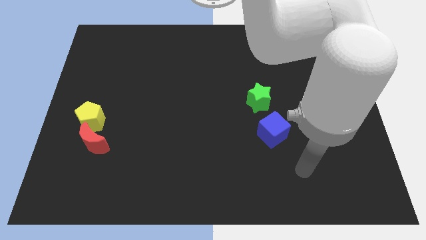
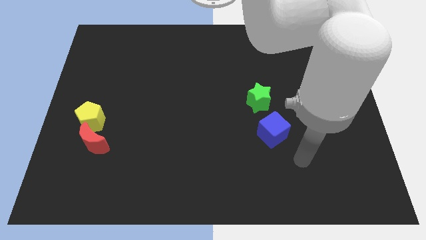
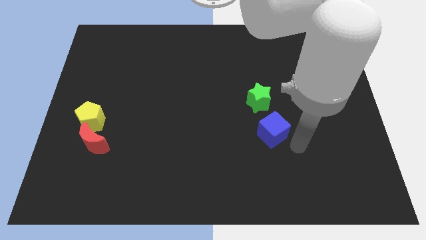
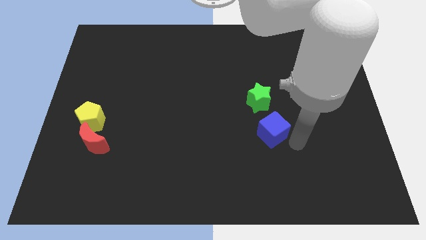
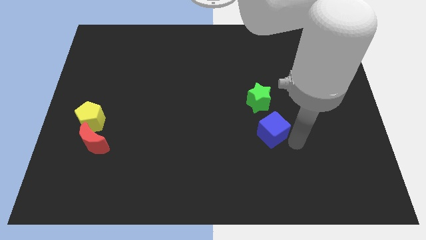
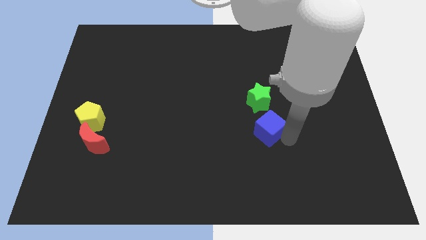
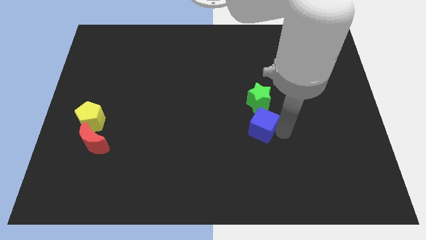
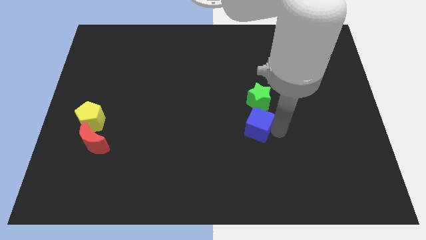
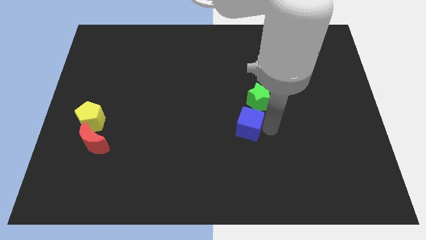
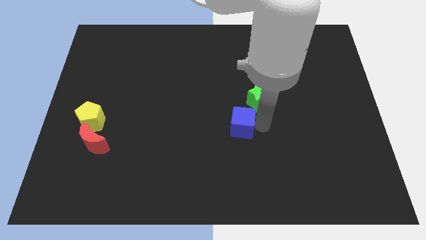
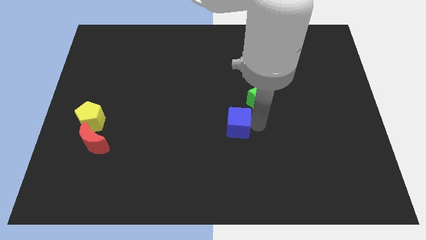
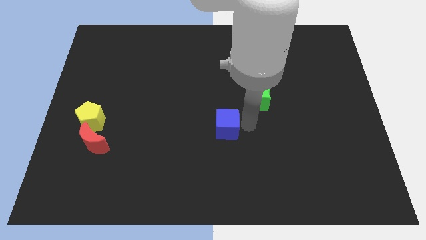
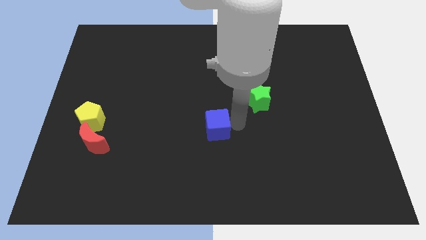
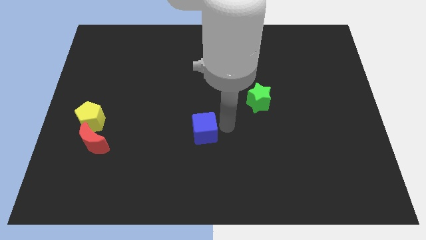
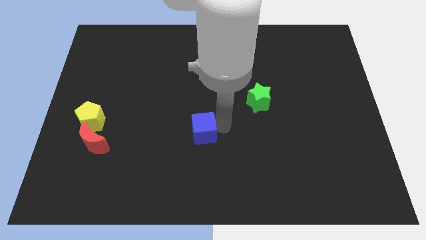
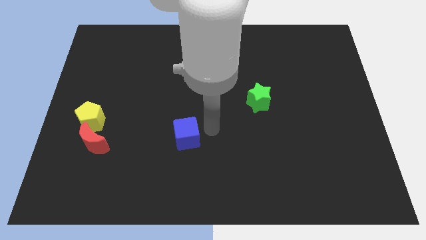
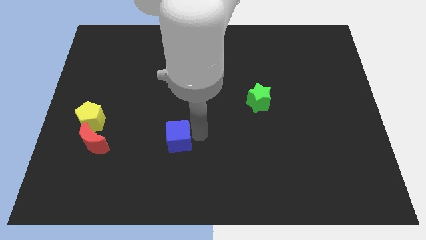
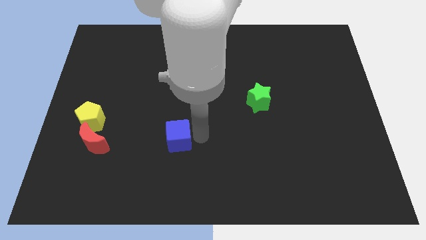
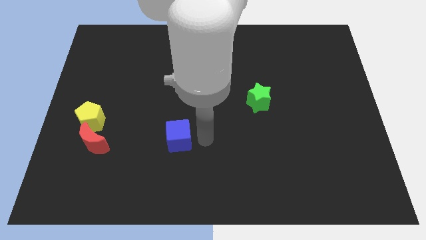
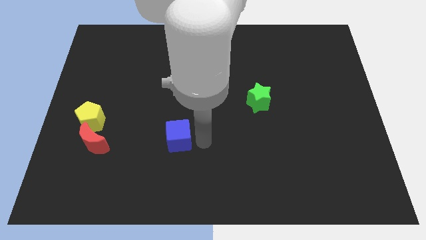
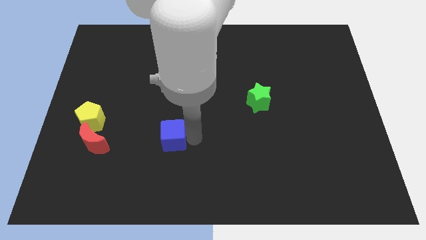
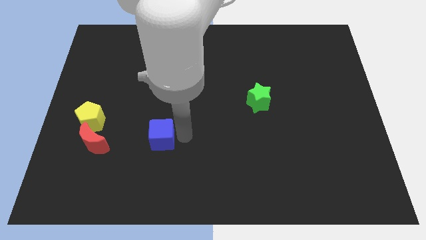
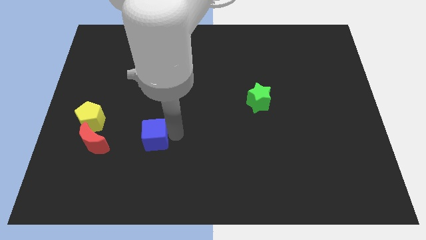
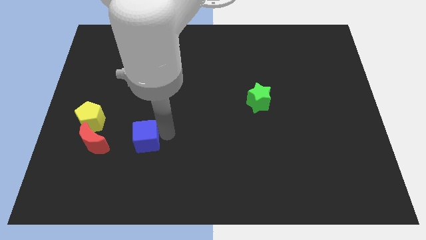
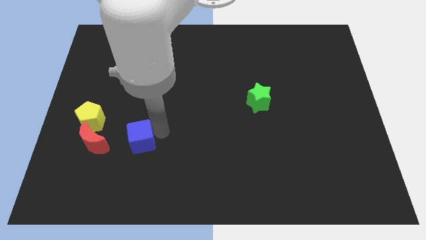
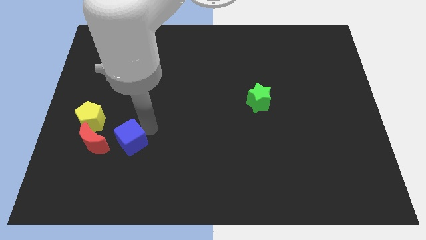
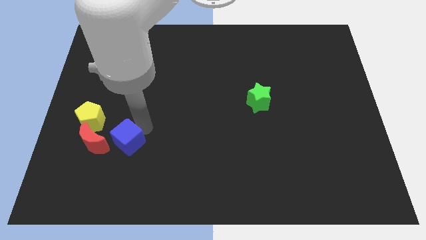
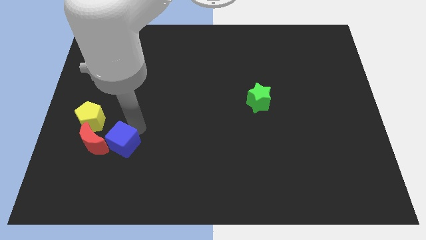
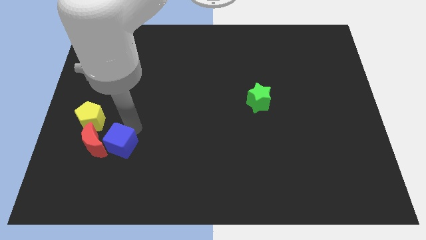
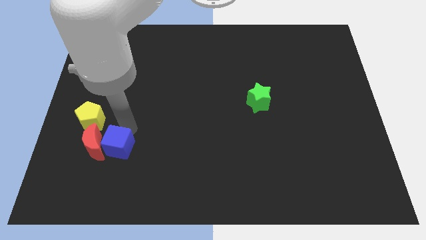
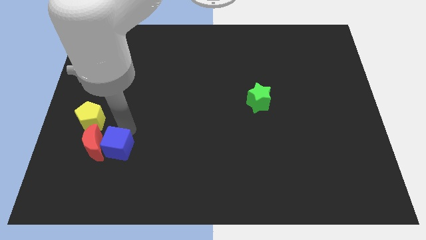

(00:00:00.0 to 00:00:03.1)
slide the blue block to the red moon

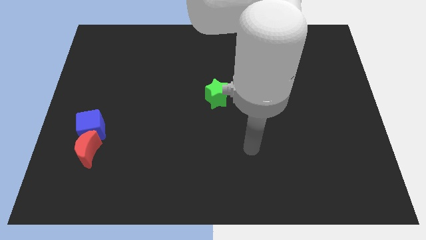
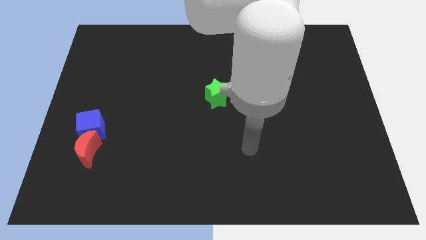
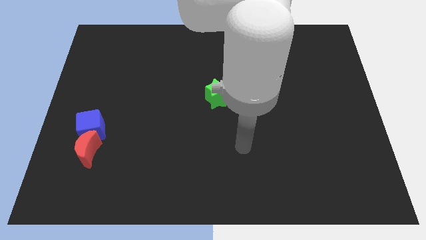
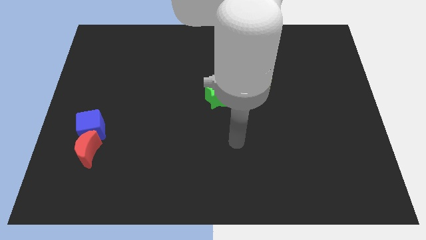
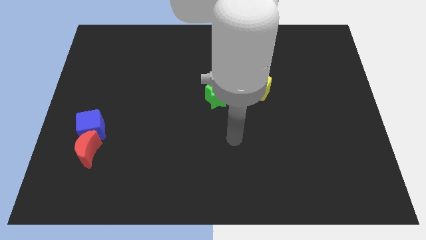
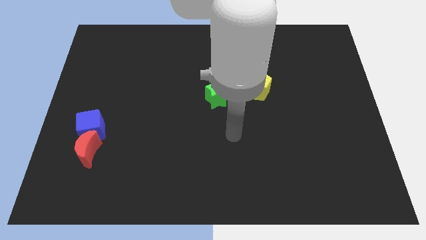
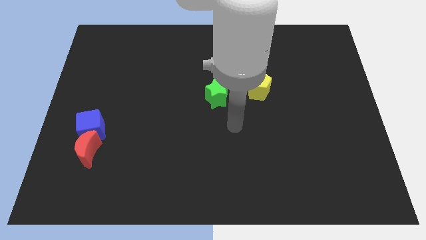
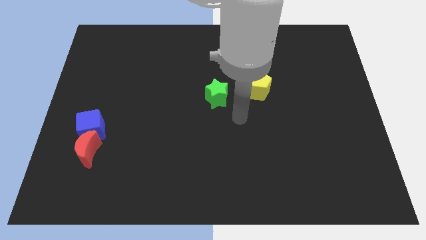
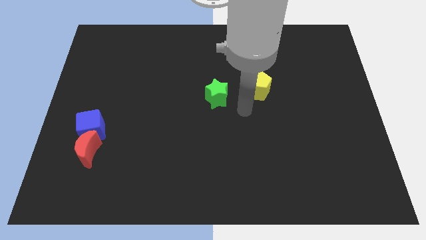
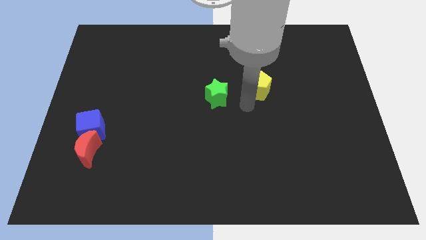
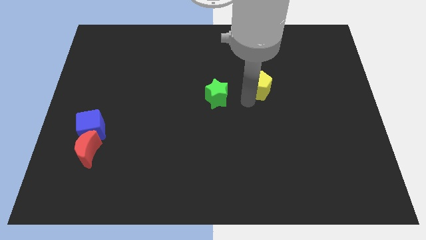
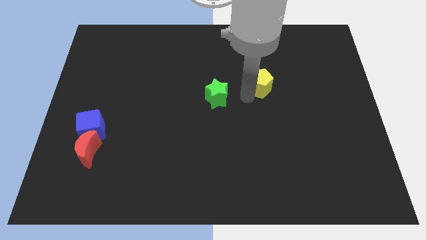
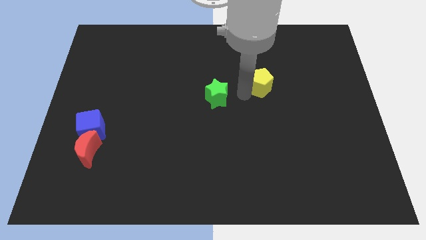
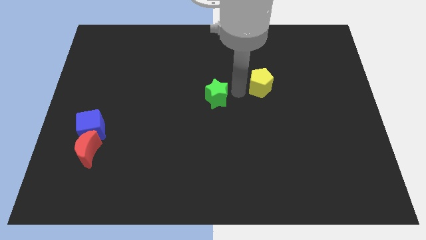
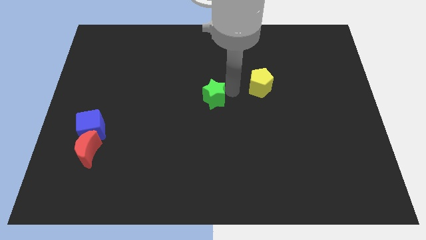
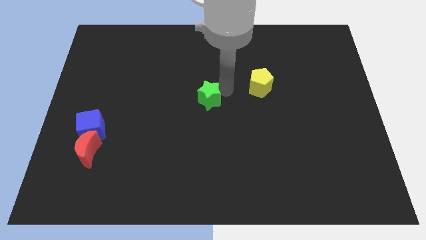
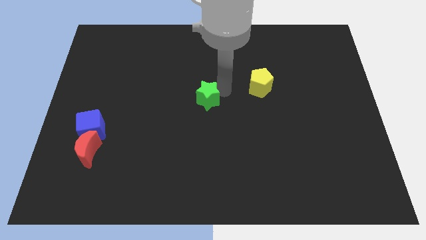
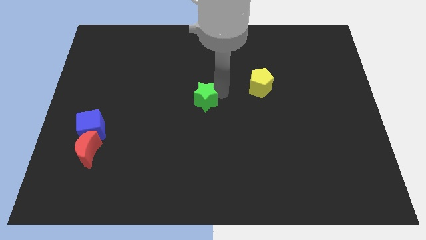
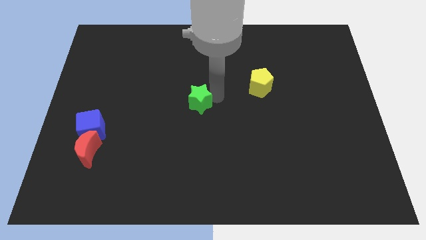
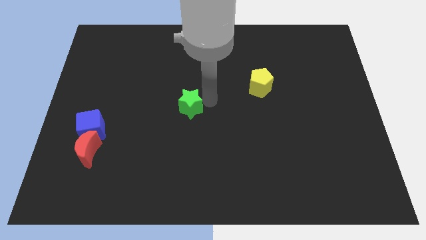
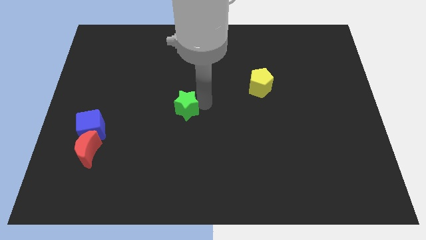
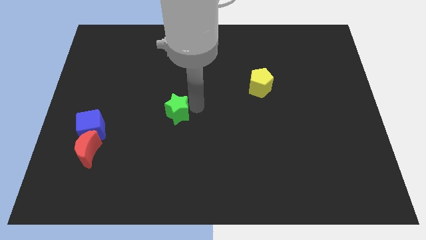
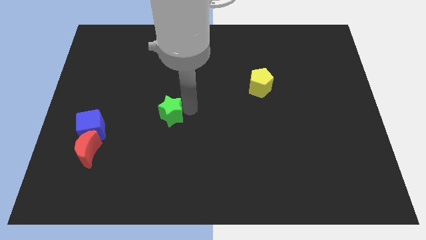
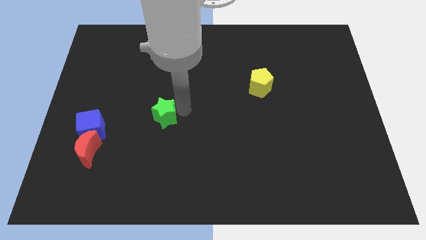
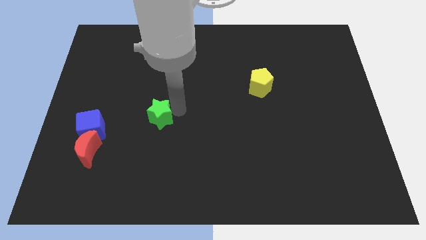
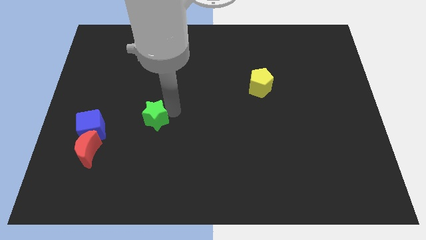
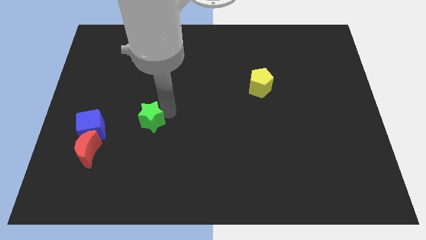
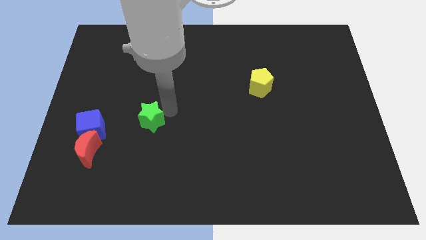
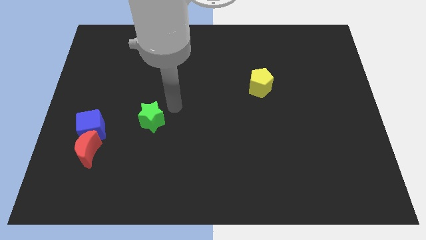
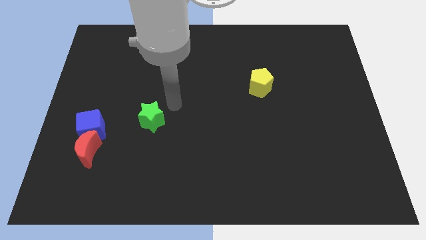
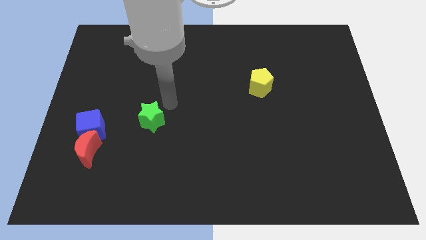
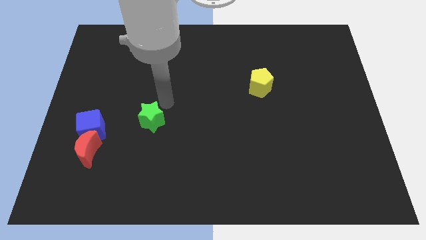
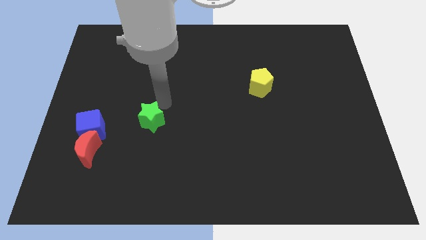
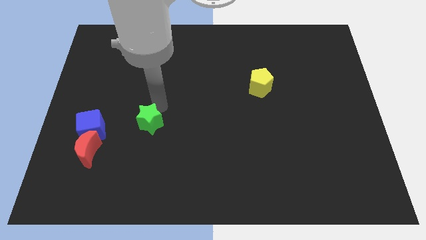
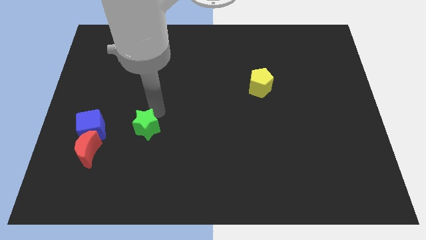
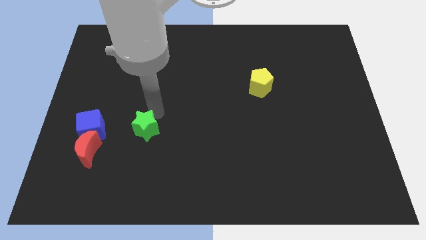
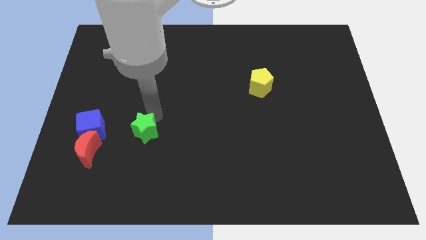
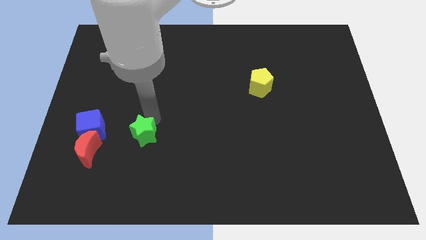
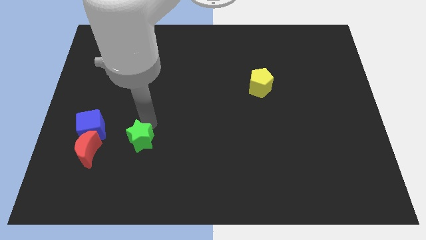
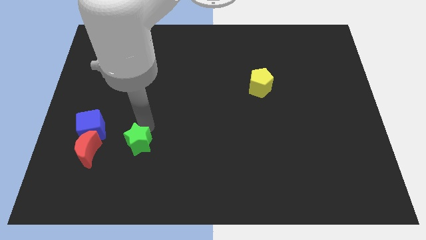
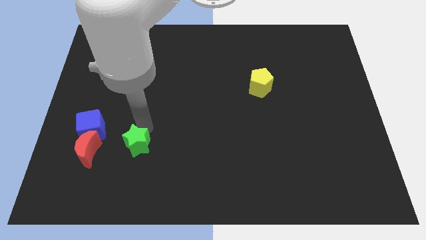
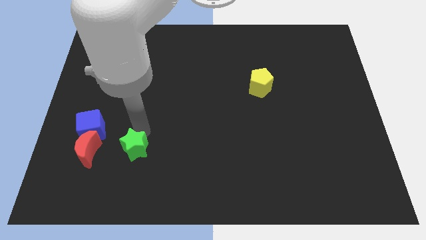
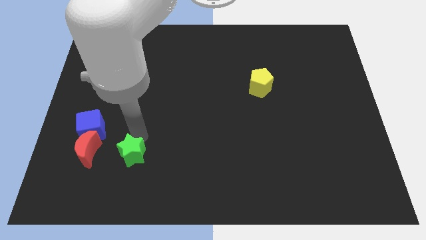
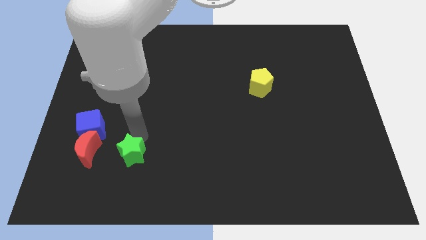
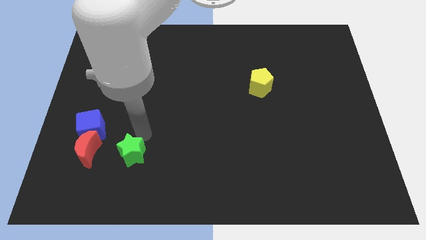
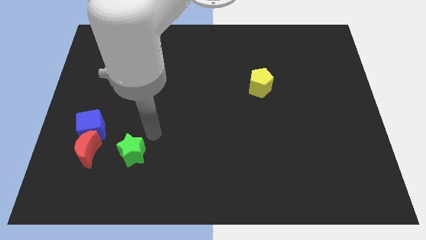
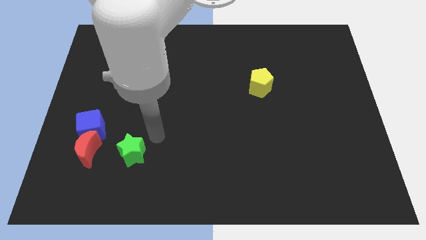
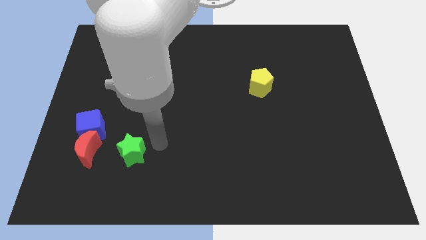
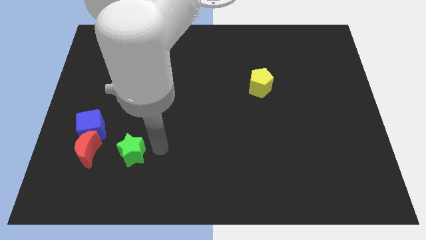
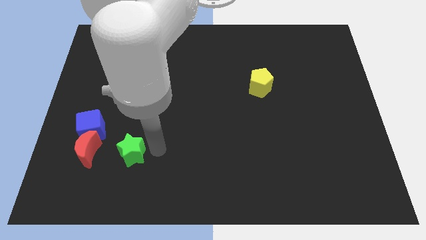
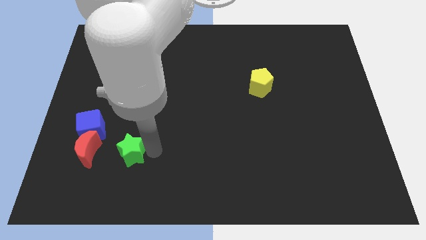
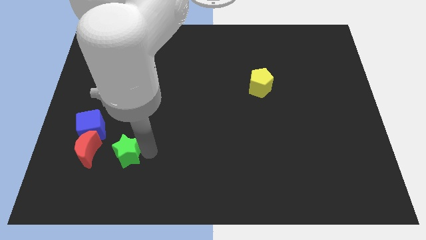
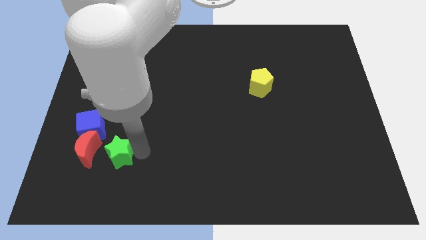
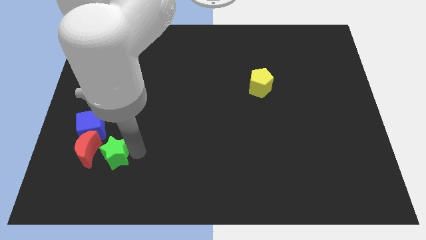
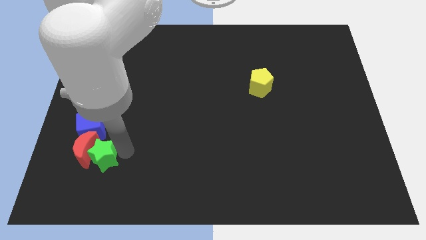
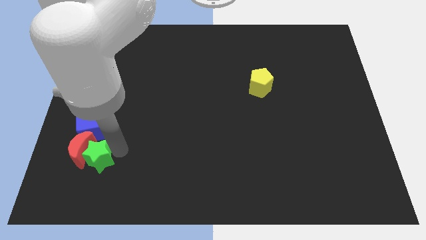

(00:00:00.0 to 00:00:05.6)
put the green block to the red moon
